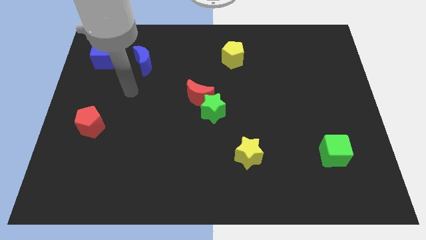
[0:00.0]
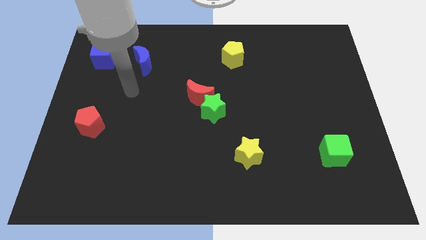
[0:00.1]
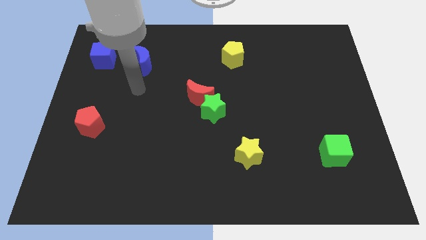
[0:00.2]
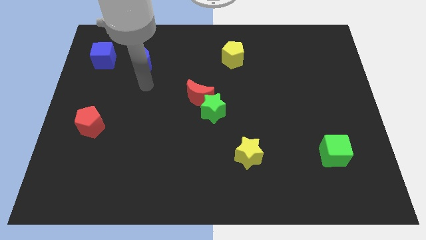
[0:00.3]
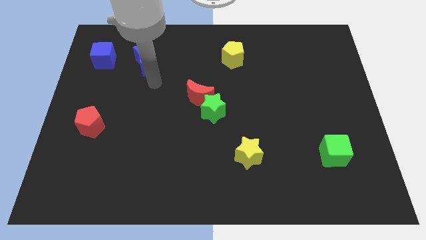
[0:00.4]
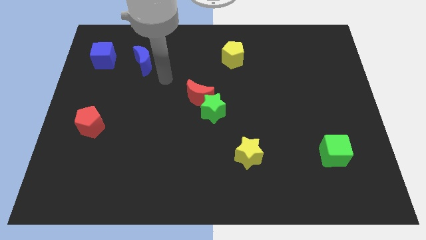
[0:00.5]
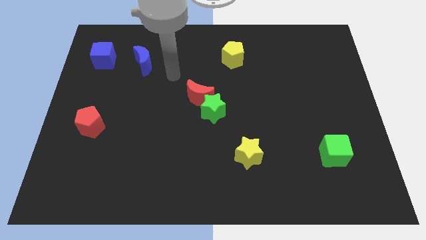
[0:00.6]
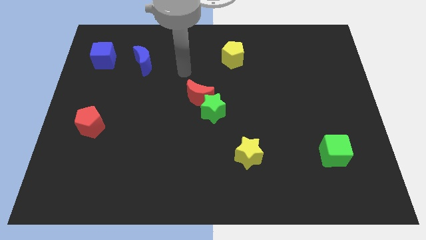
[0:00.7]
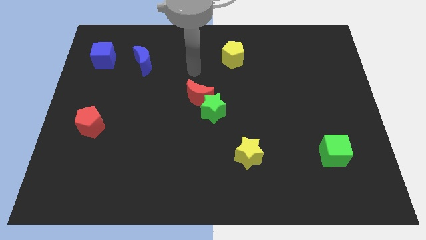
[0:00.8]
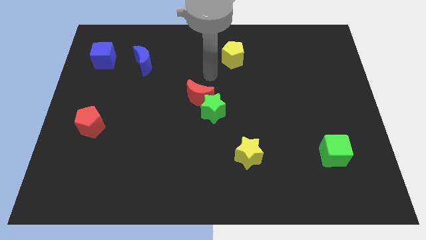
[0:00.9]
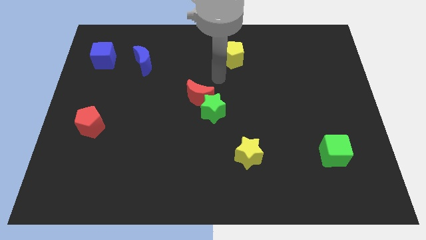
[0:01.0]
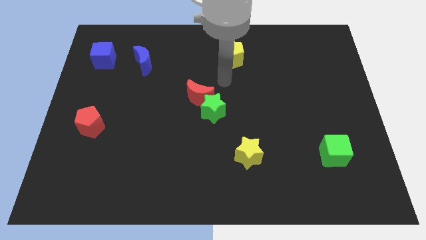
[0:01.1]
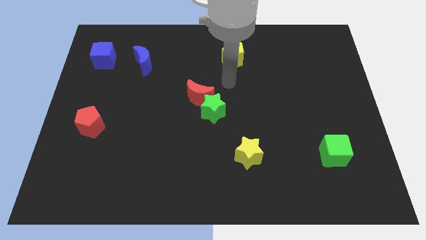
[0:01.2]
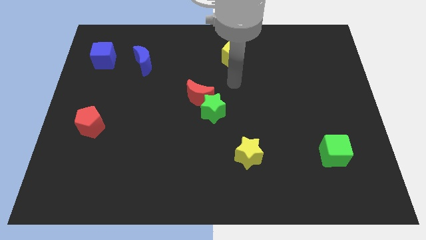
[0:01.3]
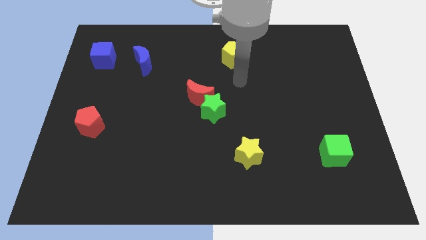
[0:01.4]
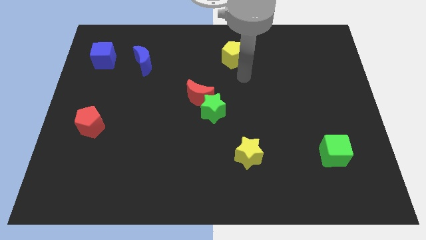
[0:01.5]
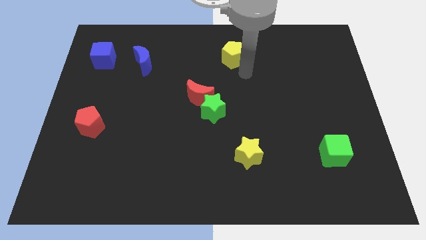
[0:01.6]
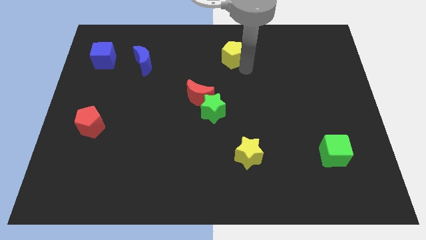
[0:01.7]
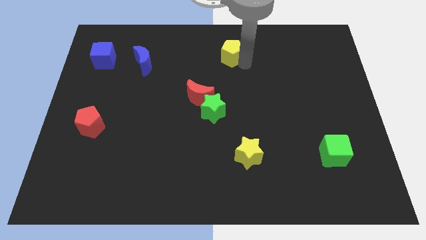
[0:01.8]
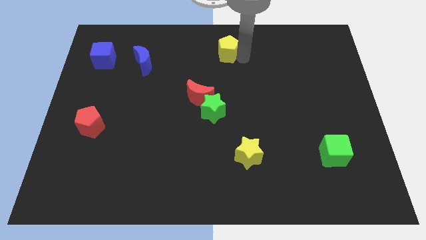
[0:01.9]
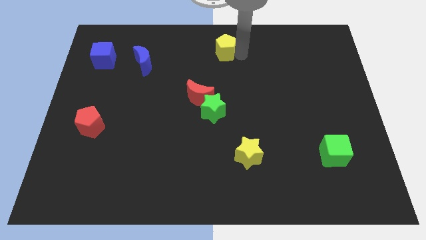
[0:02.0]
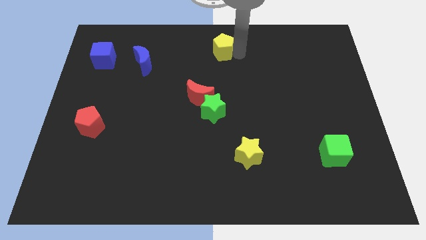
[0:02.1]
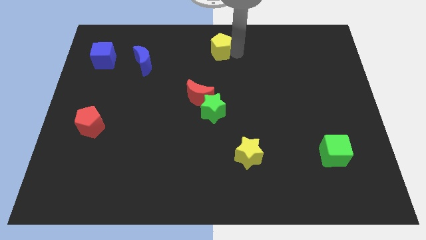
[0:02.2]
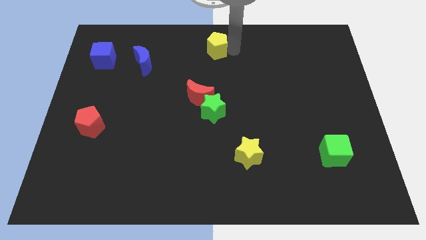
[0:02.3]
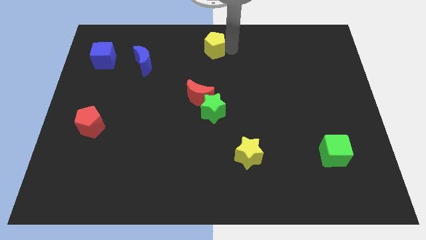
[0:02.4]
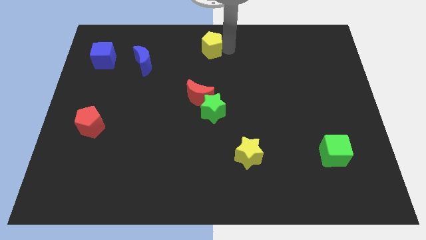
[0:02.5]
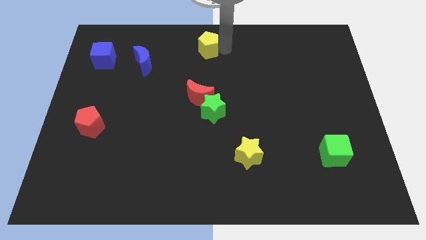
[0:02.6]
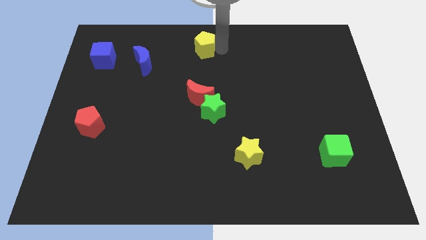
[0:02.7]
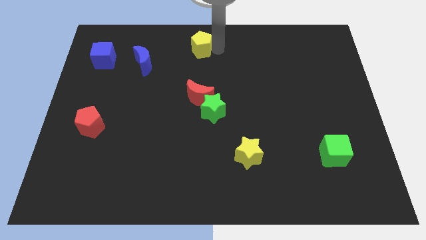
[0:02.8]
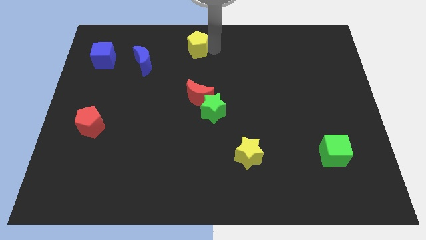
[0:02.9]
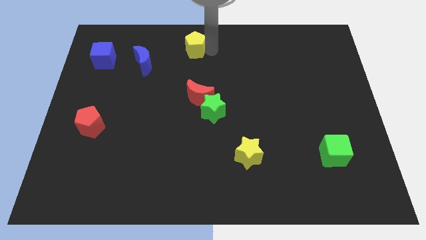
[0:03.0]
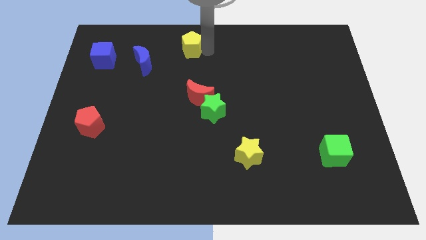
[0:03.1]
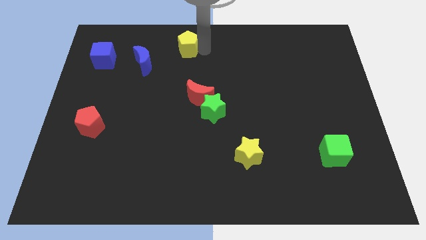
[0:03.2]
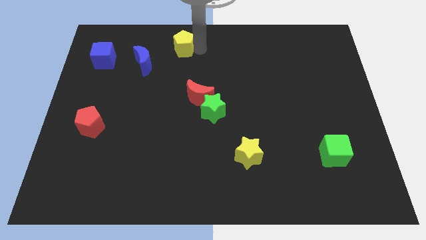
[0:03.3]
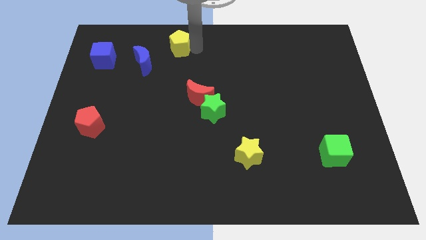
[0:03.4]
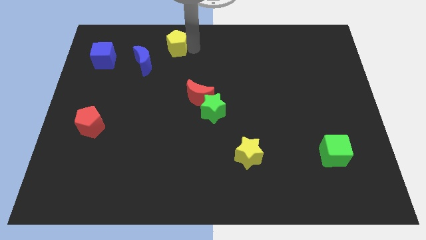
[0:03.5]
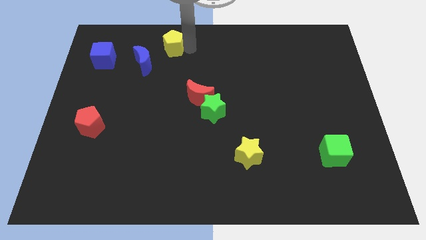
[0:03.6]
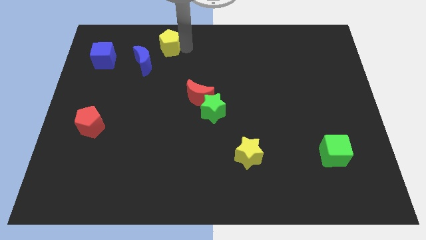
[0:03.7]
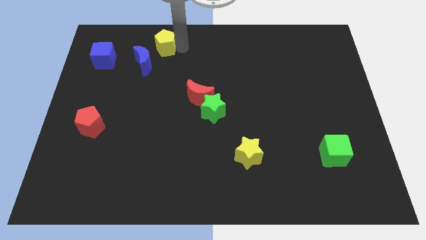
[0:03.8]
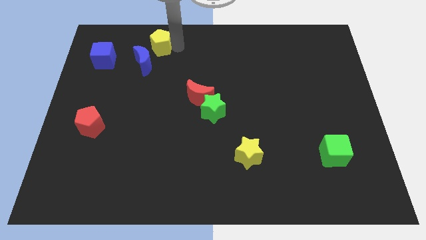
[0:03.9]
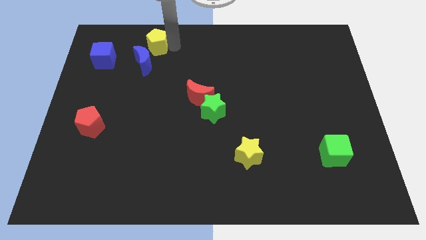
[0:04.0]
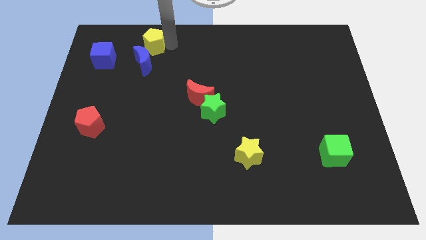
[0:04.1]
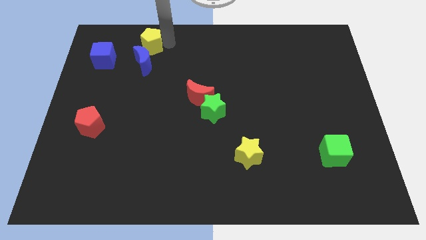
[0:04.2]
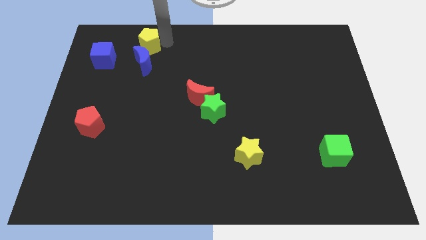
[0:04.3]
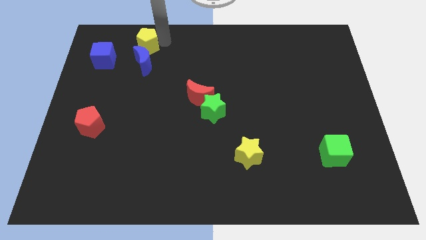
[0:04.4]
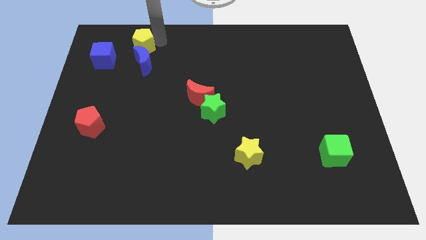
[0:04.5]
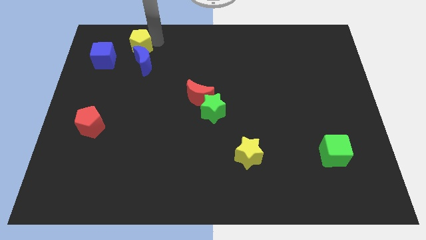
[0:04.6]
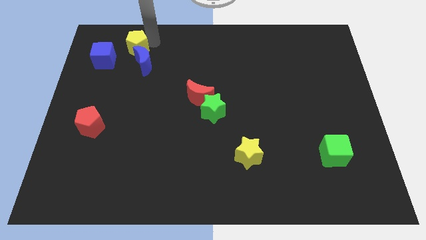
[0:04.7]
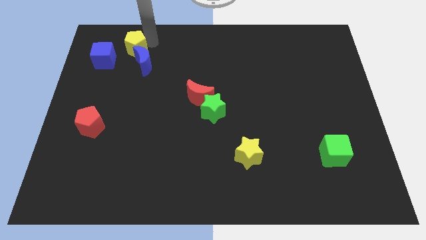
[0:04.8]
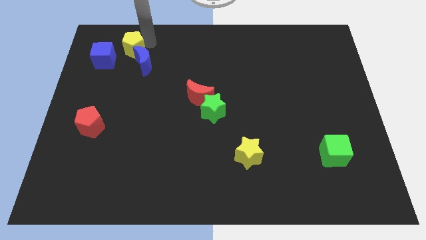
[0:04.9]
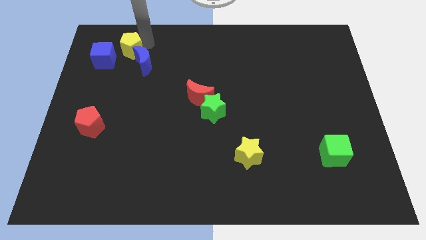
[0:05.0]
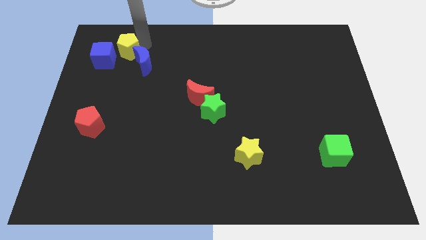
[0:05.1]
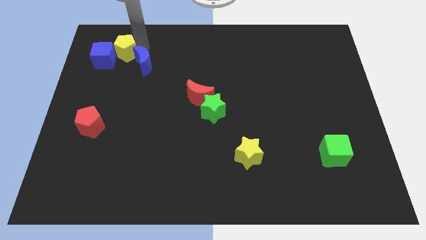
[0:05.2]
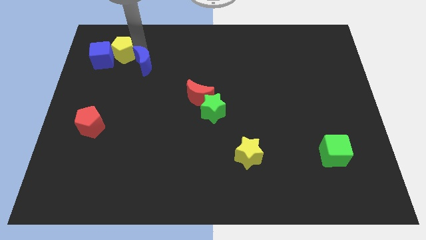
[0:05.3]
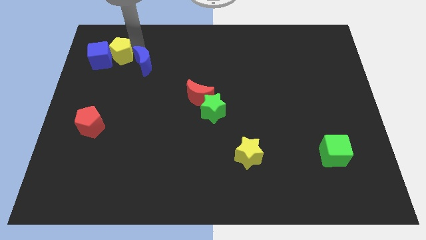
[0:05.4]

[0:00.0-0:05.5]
put the yellow pentagon close to the blue cube

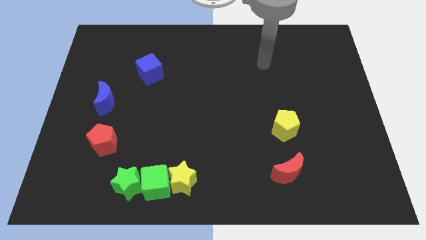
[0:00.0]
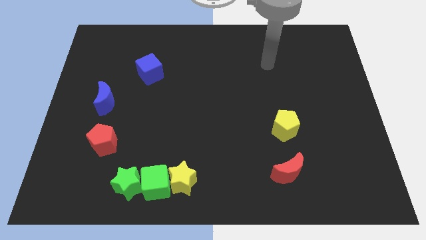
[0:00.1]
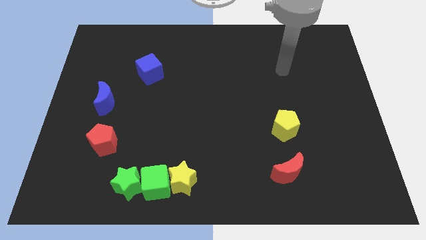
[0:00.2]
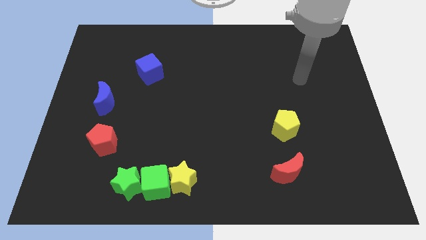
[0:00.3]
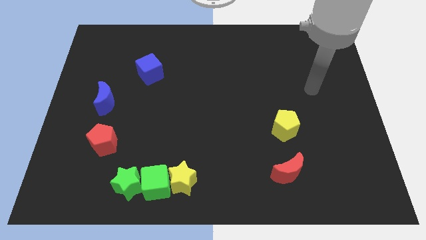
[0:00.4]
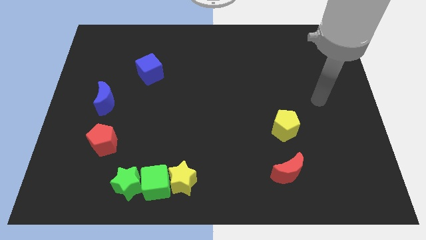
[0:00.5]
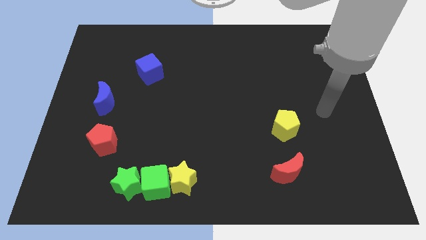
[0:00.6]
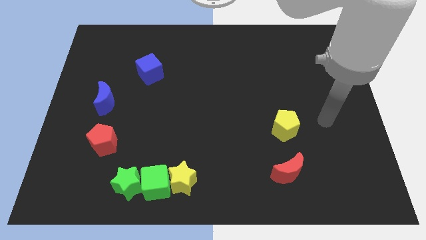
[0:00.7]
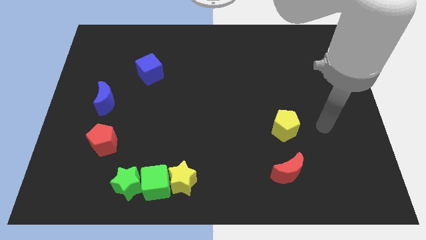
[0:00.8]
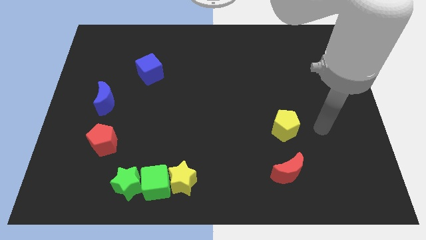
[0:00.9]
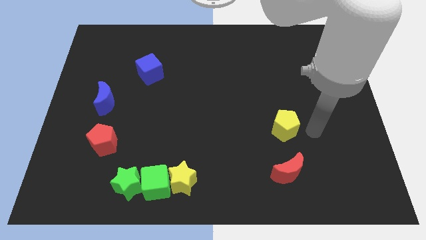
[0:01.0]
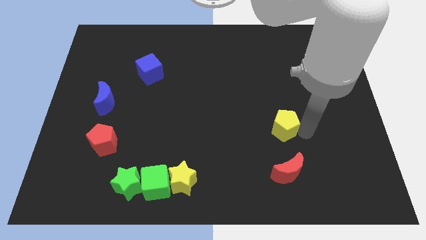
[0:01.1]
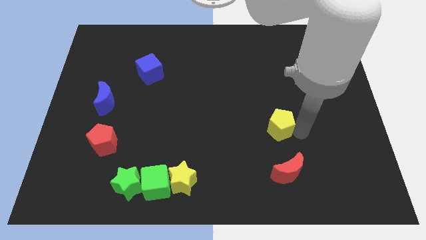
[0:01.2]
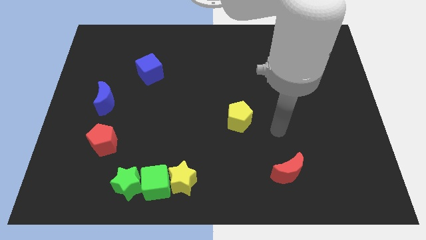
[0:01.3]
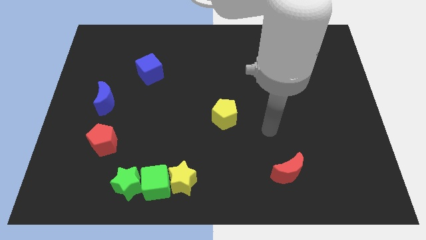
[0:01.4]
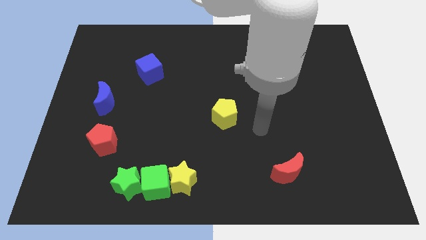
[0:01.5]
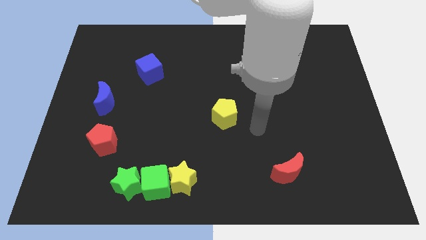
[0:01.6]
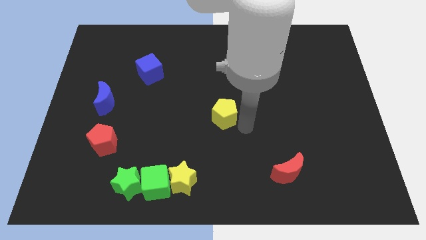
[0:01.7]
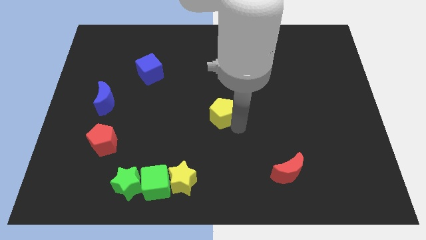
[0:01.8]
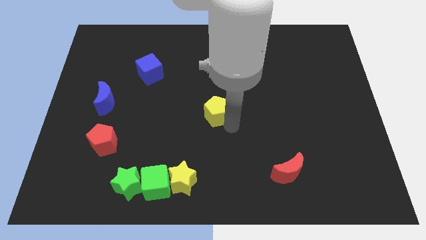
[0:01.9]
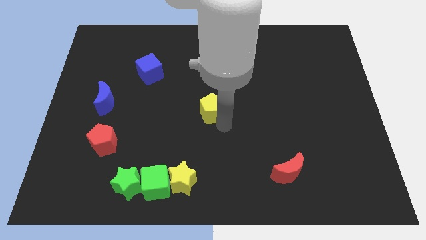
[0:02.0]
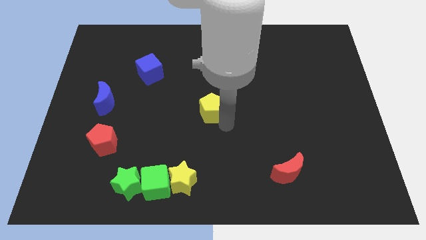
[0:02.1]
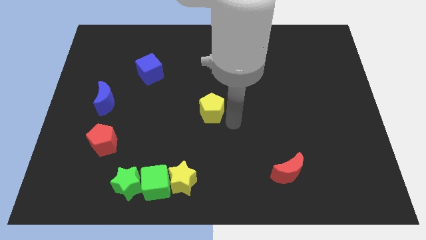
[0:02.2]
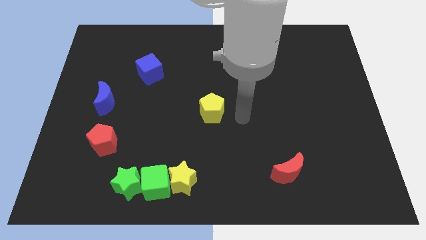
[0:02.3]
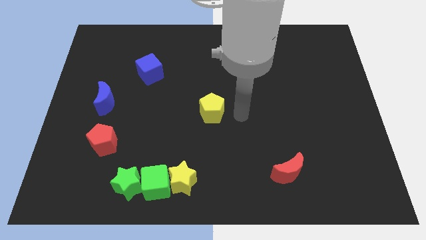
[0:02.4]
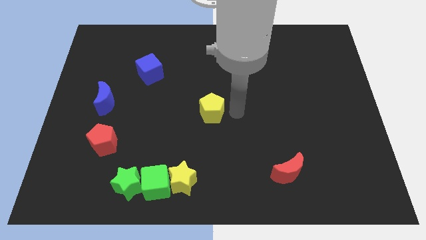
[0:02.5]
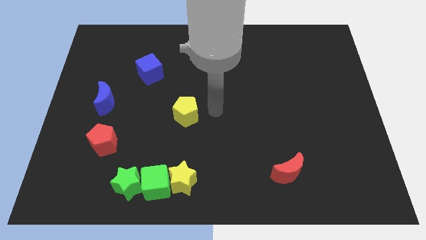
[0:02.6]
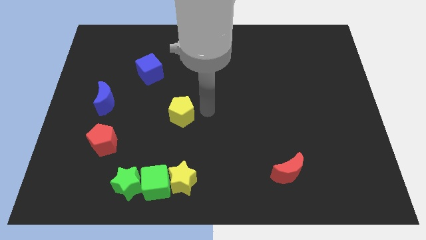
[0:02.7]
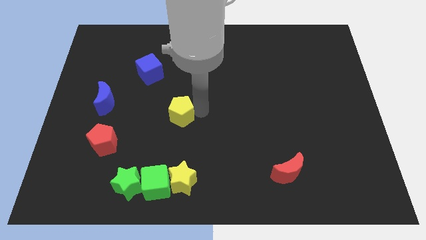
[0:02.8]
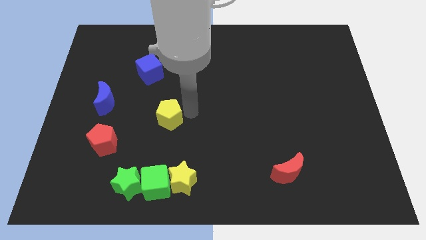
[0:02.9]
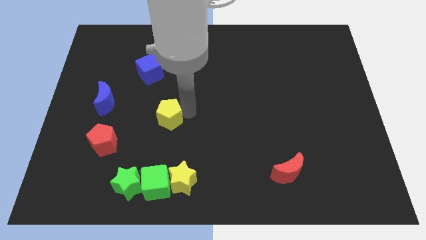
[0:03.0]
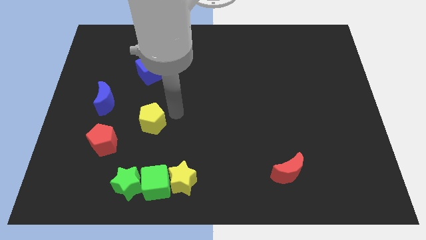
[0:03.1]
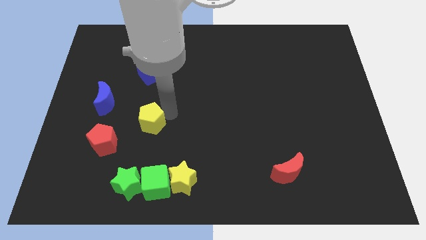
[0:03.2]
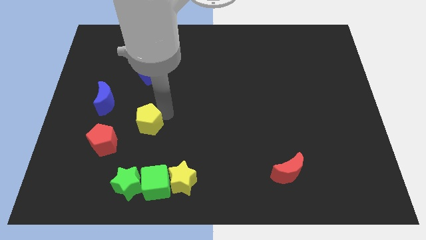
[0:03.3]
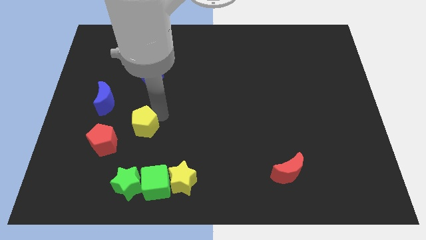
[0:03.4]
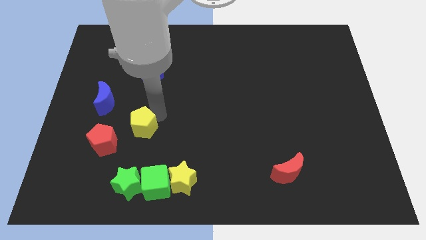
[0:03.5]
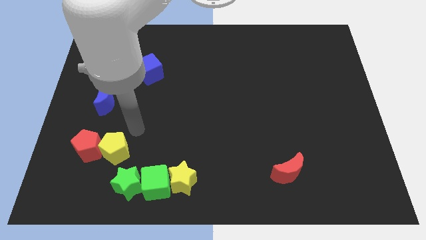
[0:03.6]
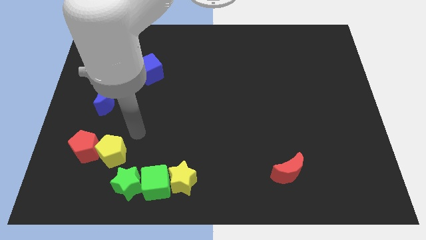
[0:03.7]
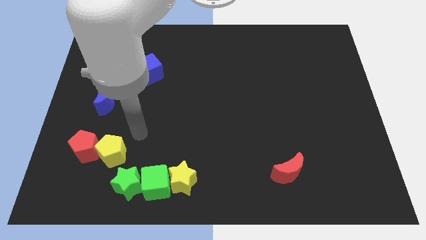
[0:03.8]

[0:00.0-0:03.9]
put the yellow pentagon close to the red pentagon
